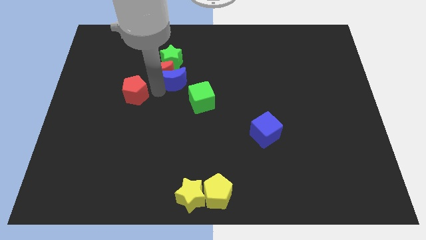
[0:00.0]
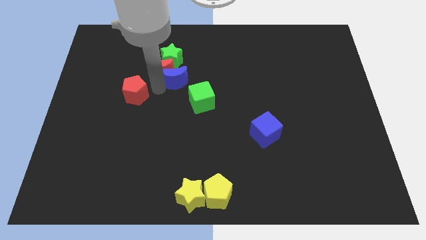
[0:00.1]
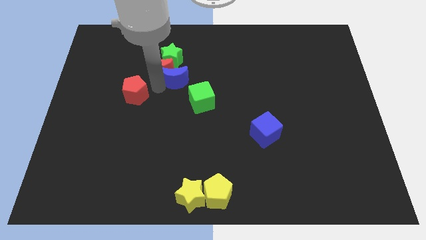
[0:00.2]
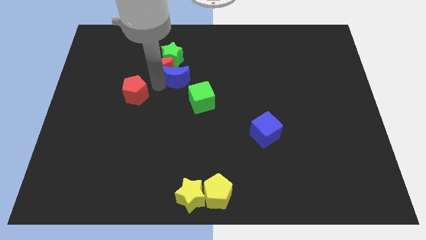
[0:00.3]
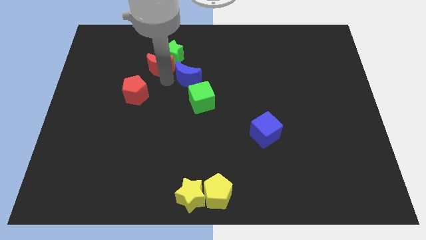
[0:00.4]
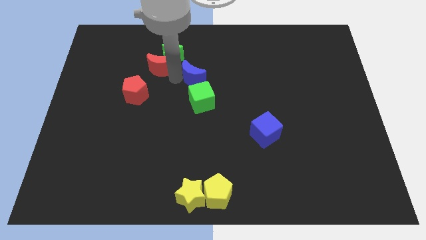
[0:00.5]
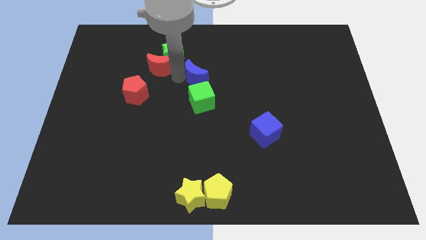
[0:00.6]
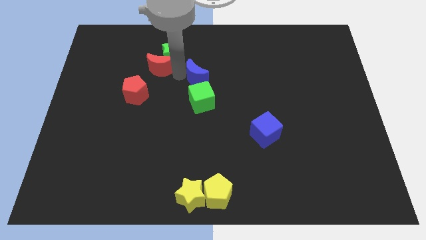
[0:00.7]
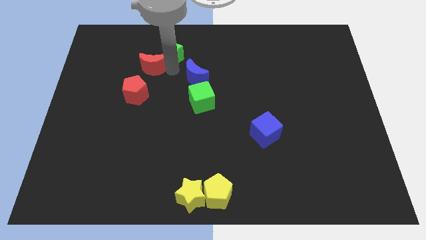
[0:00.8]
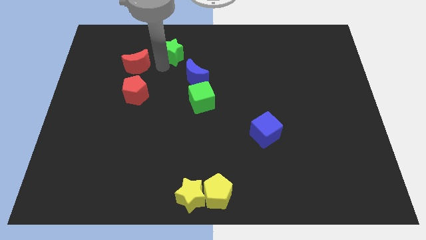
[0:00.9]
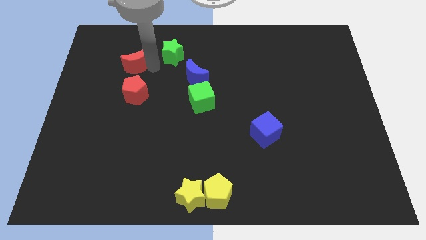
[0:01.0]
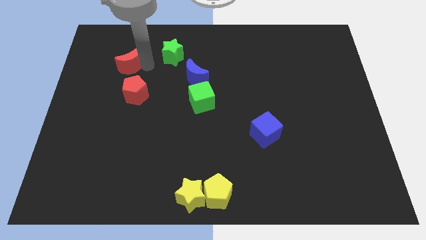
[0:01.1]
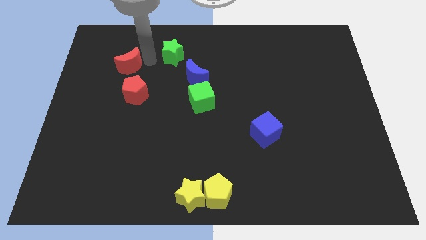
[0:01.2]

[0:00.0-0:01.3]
move blue moon to the top of green cube

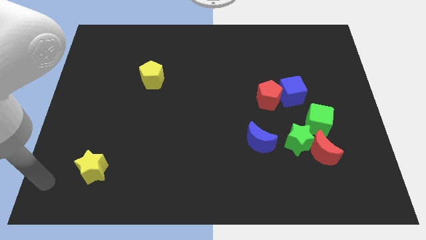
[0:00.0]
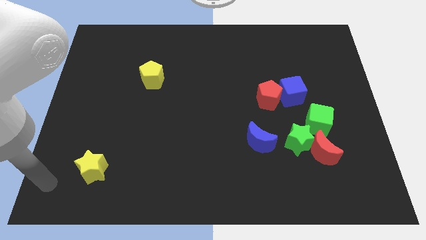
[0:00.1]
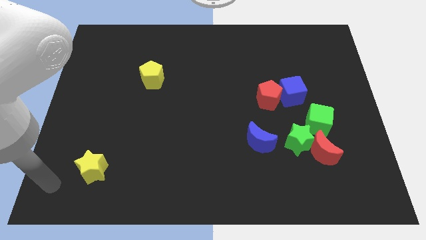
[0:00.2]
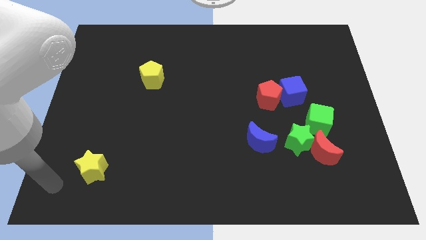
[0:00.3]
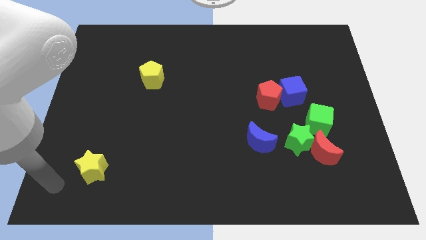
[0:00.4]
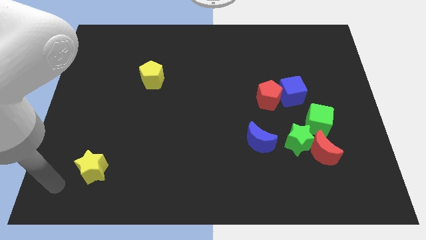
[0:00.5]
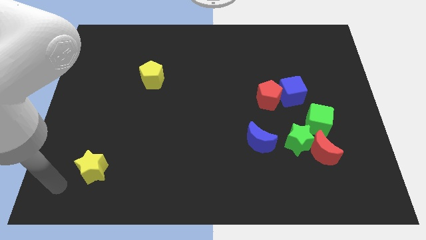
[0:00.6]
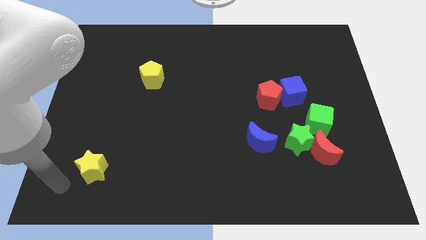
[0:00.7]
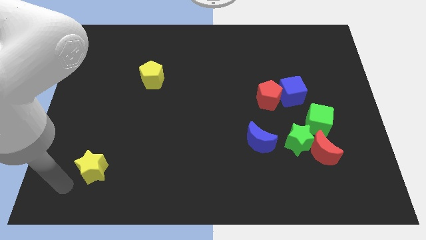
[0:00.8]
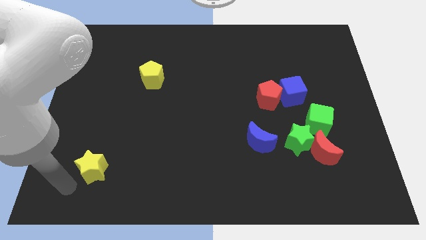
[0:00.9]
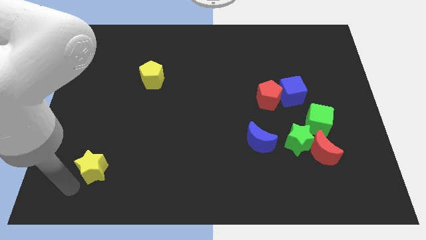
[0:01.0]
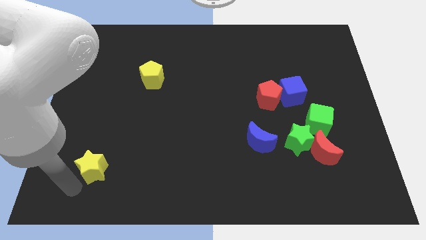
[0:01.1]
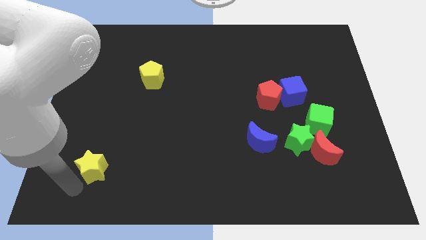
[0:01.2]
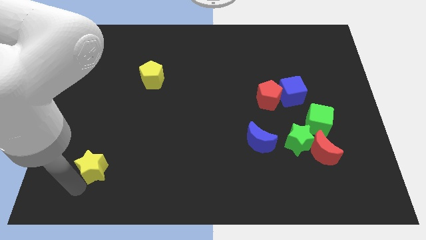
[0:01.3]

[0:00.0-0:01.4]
touch the bottom left of the yellow star

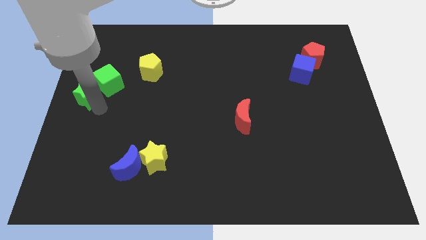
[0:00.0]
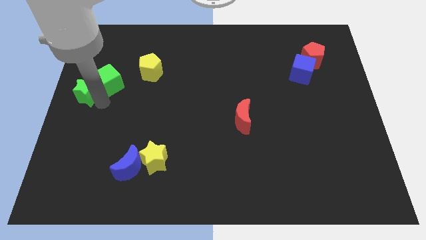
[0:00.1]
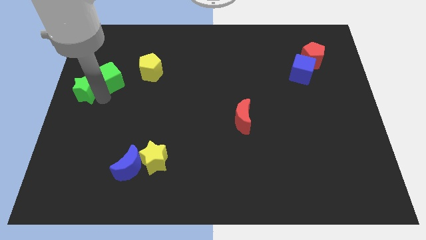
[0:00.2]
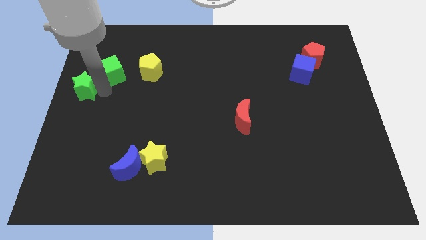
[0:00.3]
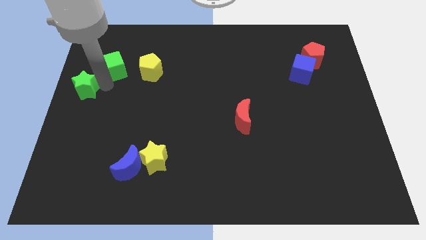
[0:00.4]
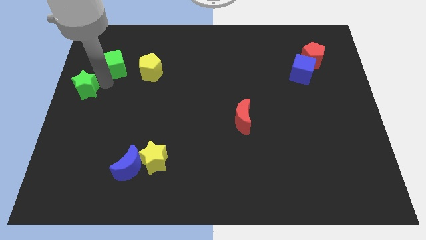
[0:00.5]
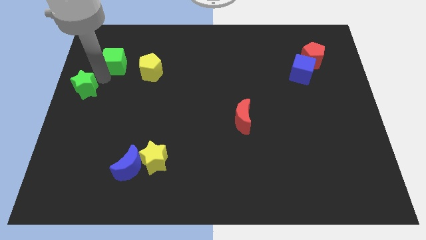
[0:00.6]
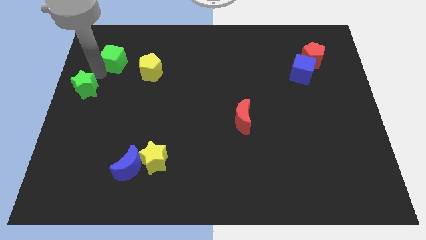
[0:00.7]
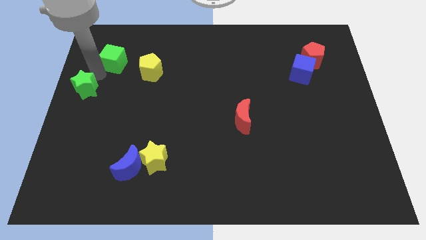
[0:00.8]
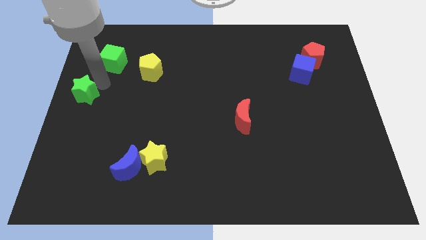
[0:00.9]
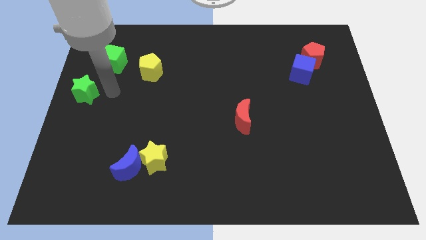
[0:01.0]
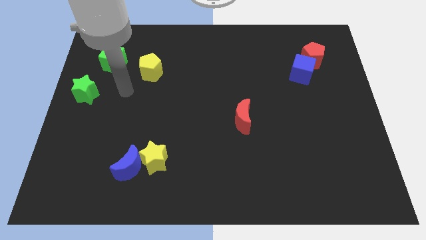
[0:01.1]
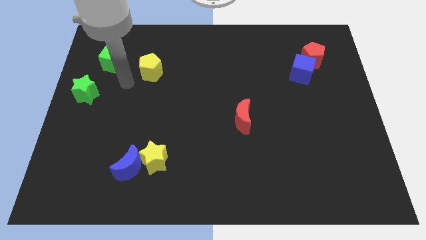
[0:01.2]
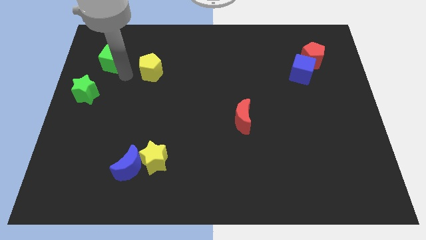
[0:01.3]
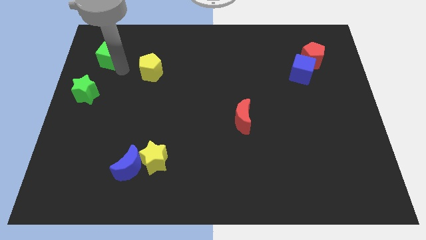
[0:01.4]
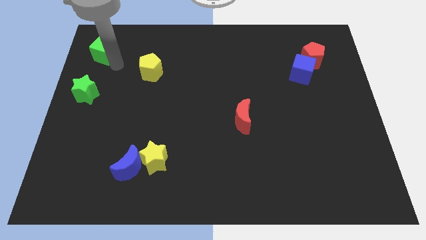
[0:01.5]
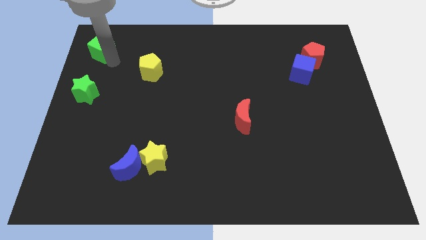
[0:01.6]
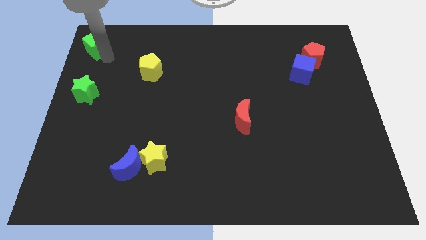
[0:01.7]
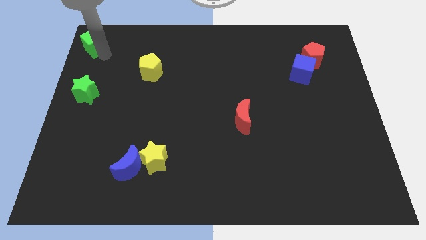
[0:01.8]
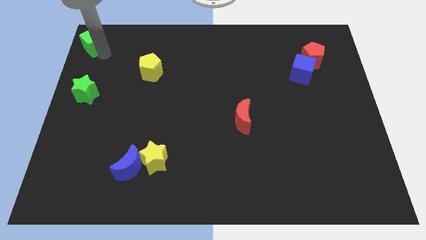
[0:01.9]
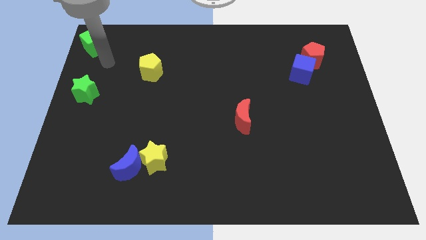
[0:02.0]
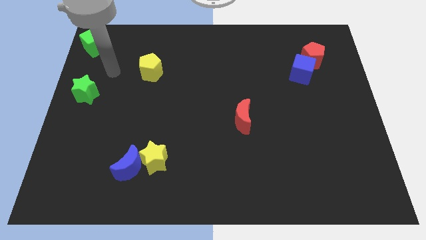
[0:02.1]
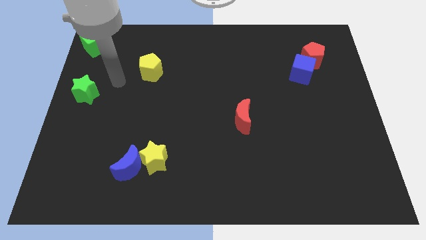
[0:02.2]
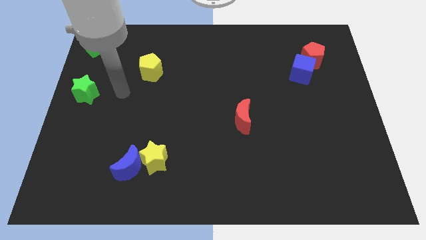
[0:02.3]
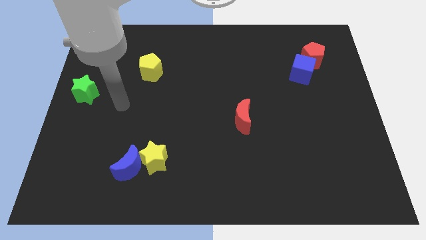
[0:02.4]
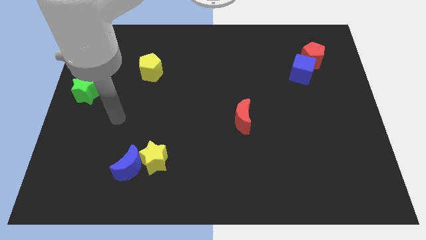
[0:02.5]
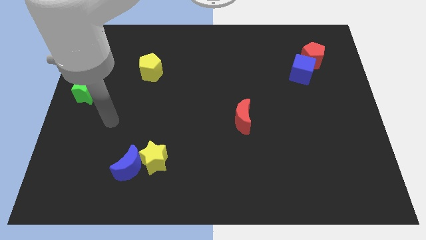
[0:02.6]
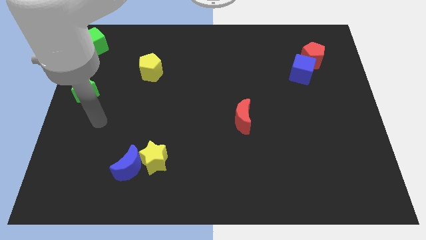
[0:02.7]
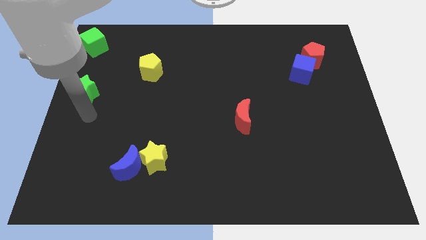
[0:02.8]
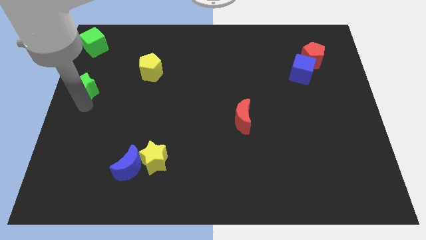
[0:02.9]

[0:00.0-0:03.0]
move the green cube to the top left of the board

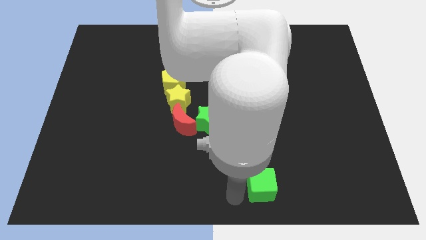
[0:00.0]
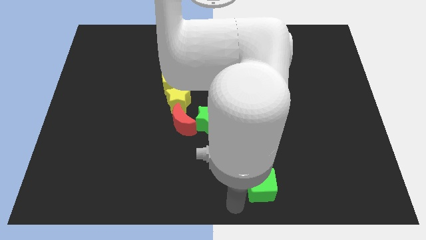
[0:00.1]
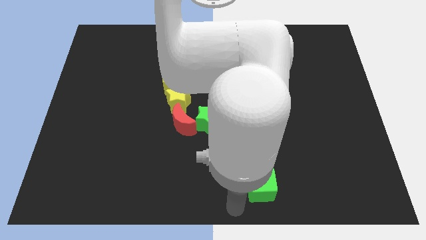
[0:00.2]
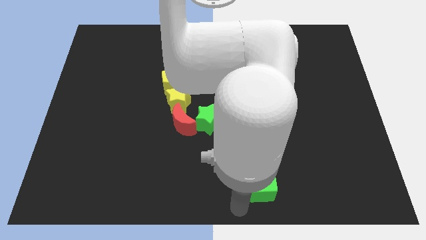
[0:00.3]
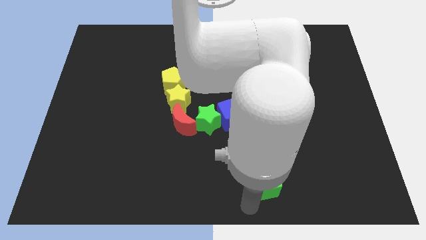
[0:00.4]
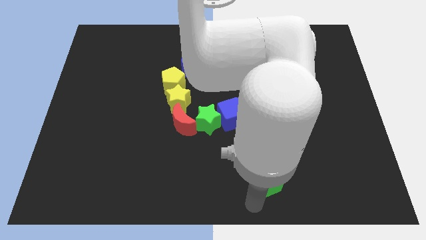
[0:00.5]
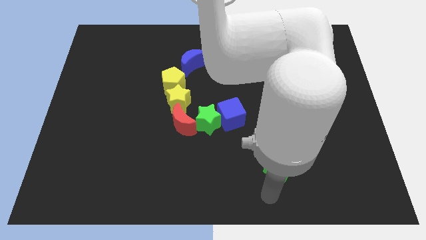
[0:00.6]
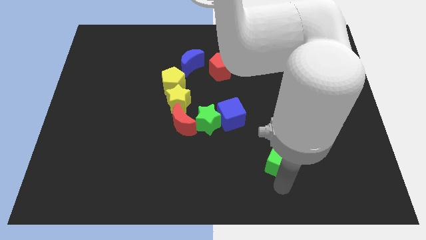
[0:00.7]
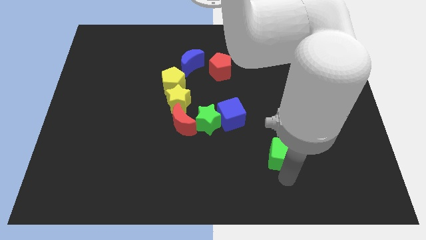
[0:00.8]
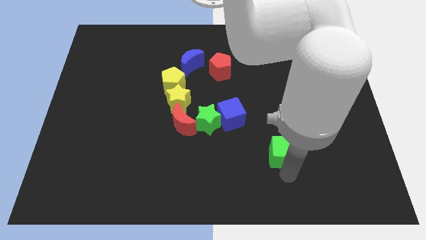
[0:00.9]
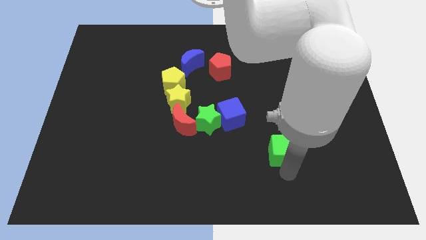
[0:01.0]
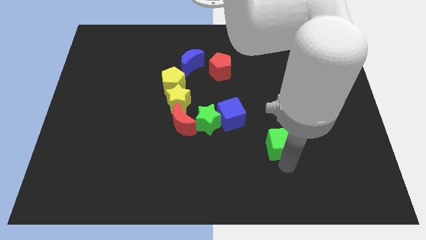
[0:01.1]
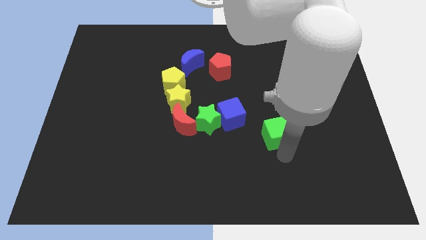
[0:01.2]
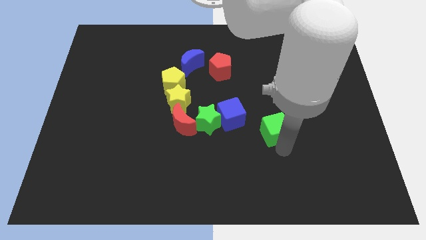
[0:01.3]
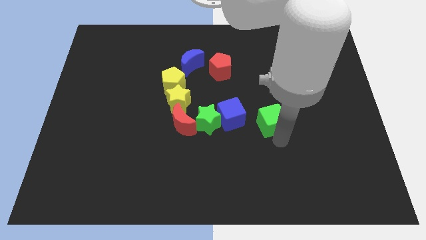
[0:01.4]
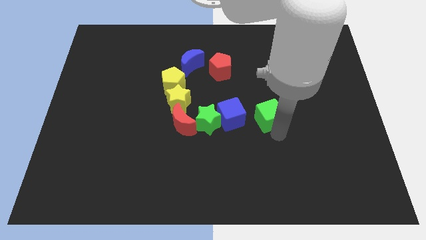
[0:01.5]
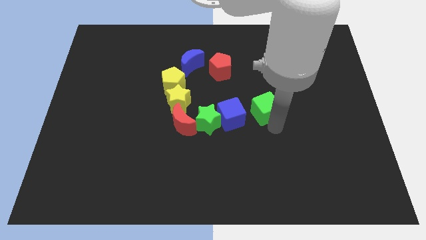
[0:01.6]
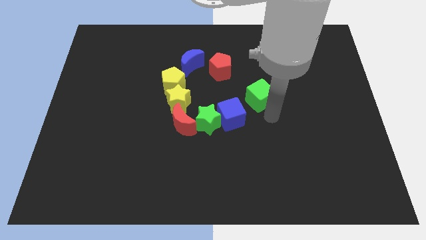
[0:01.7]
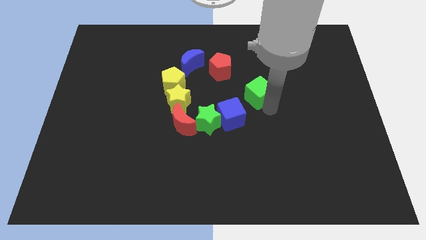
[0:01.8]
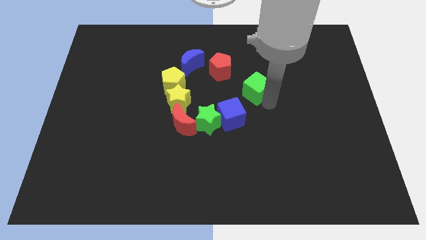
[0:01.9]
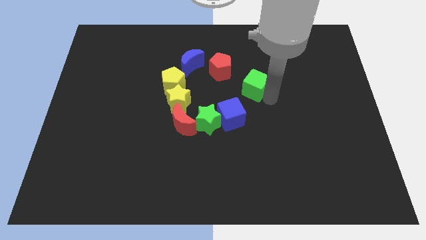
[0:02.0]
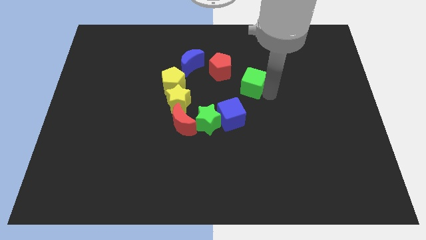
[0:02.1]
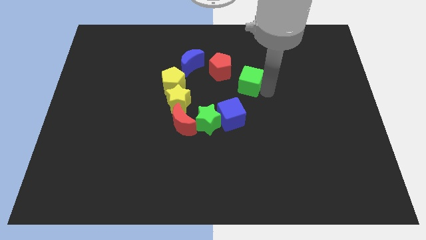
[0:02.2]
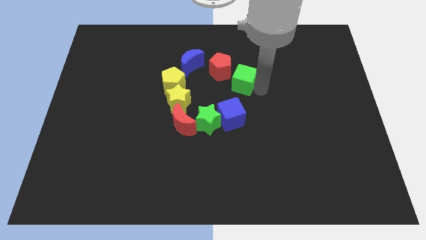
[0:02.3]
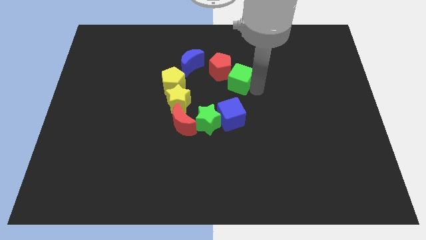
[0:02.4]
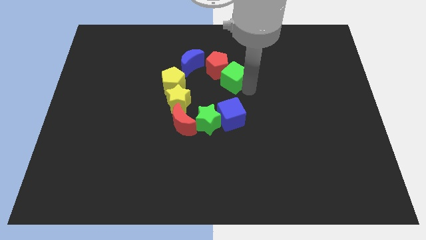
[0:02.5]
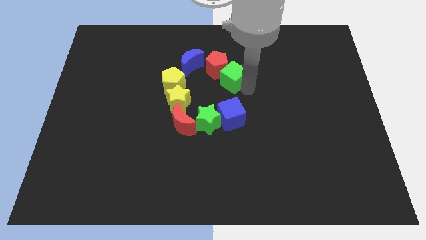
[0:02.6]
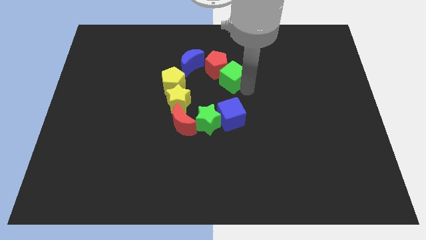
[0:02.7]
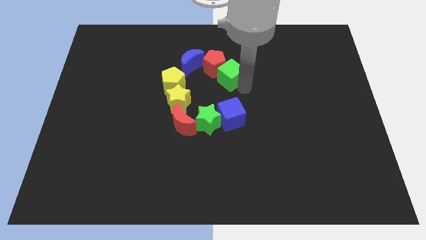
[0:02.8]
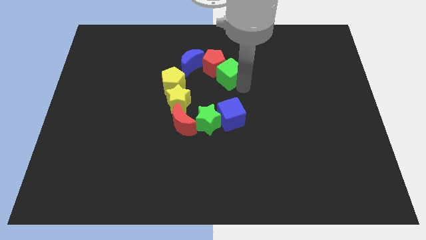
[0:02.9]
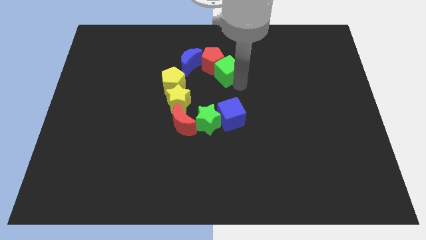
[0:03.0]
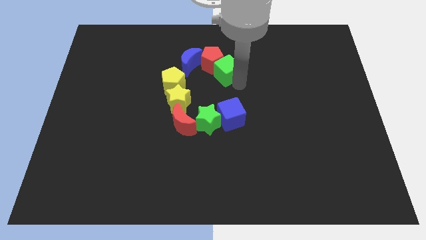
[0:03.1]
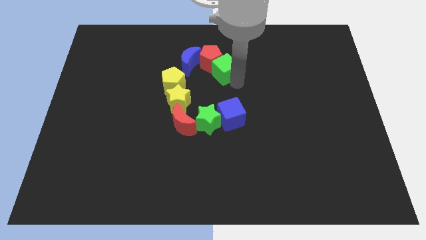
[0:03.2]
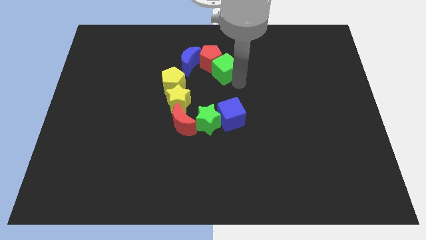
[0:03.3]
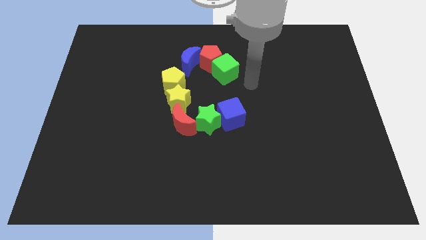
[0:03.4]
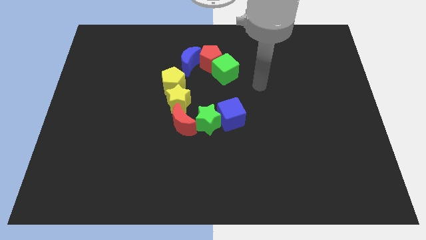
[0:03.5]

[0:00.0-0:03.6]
move green cube into the red pentagon
